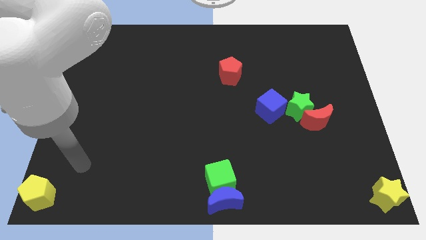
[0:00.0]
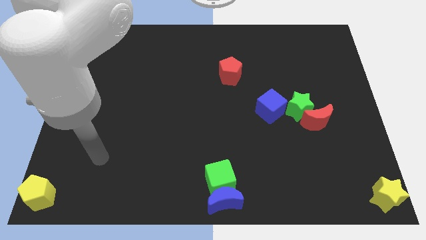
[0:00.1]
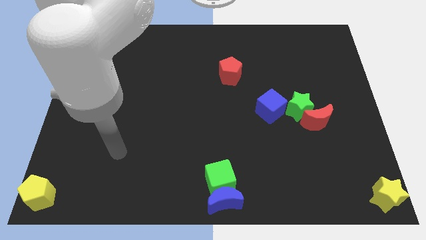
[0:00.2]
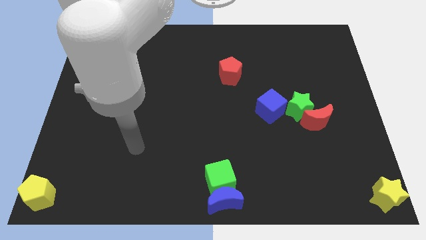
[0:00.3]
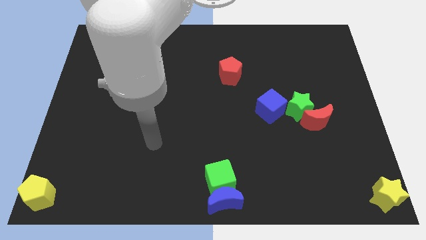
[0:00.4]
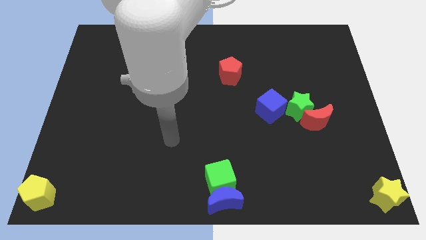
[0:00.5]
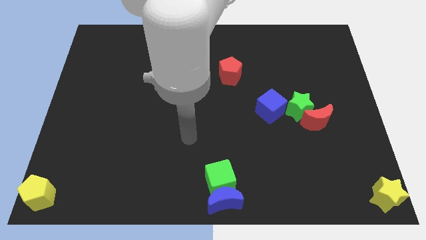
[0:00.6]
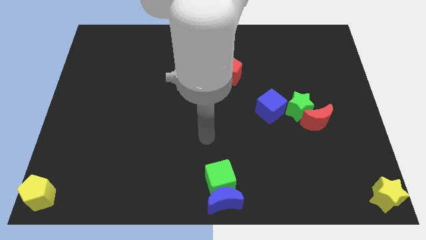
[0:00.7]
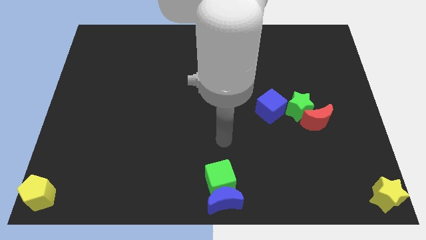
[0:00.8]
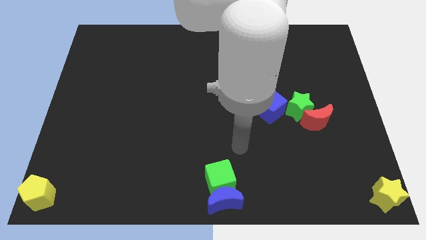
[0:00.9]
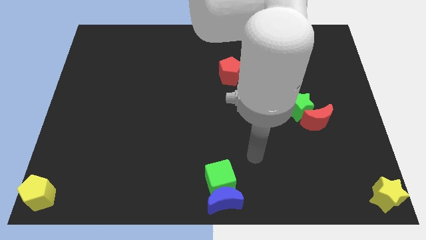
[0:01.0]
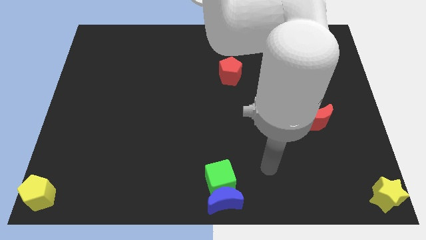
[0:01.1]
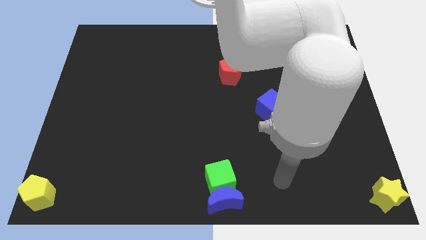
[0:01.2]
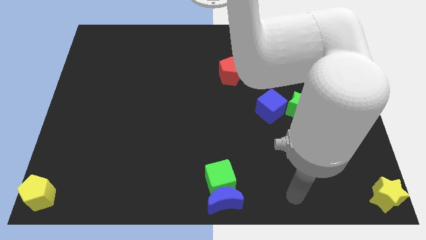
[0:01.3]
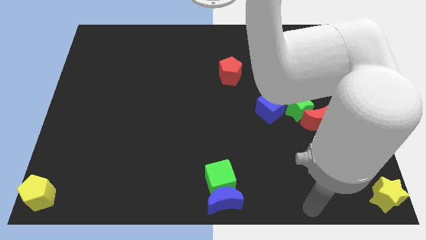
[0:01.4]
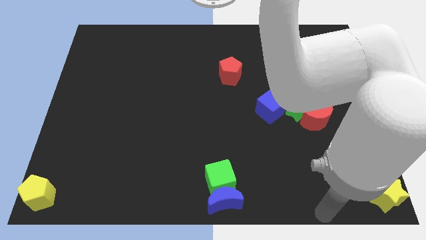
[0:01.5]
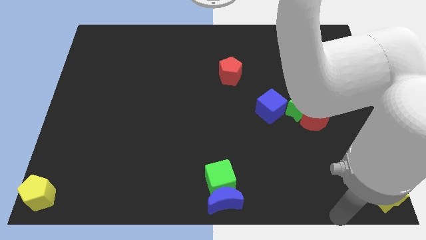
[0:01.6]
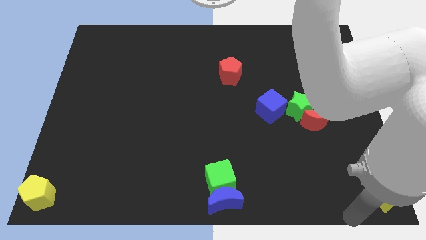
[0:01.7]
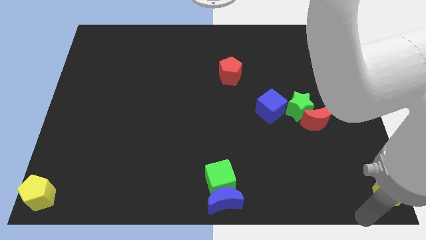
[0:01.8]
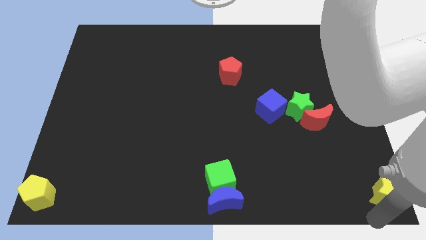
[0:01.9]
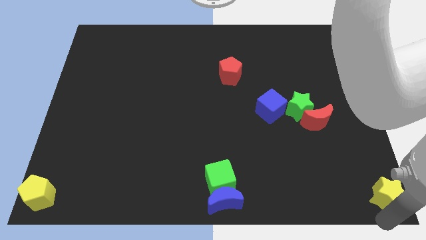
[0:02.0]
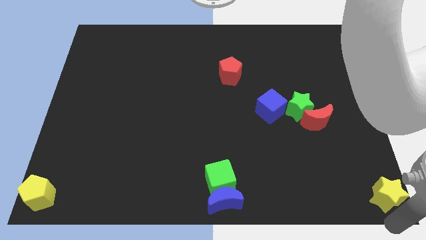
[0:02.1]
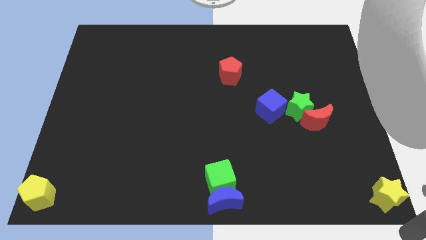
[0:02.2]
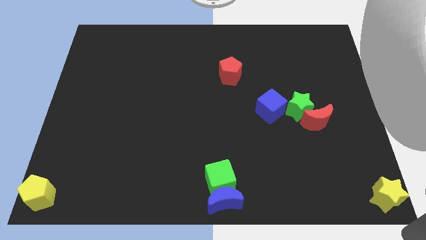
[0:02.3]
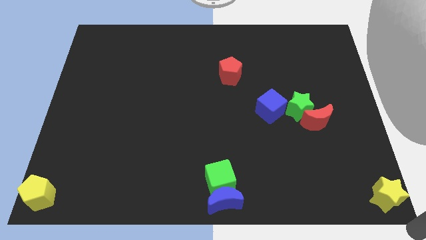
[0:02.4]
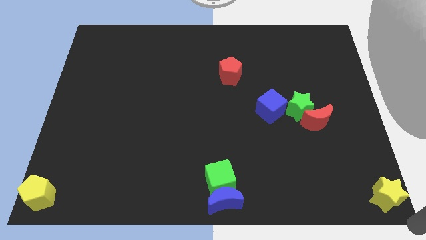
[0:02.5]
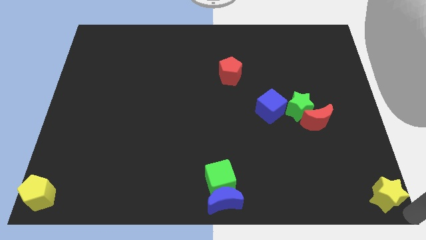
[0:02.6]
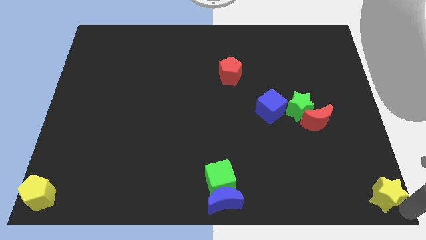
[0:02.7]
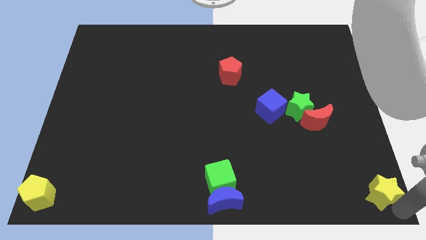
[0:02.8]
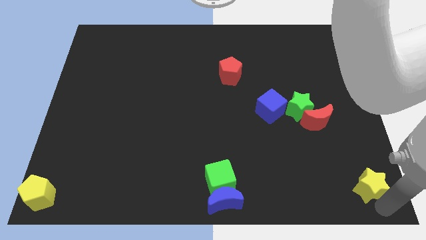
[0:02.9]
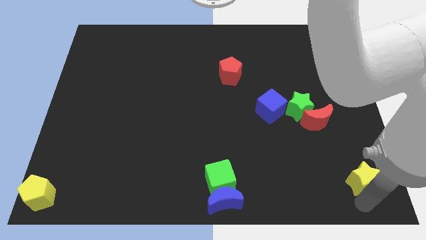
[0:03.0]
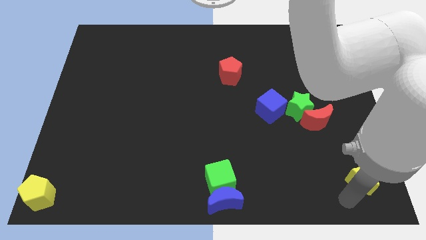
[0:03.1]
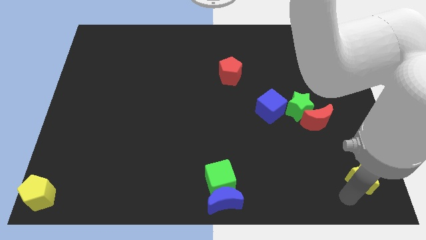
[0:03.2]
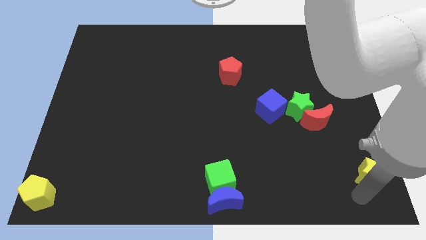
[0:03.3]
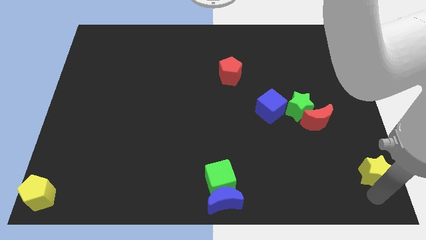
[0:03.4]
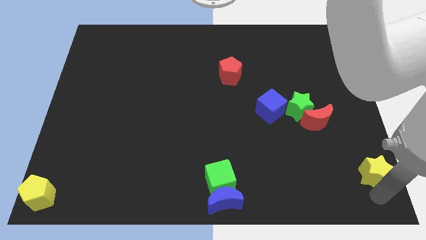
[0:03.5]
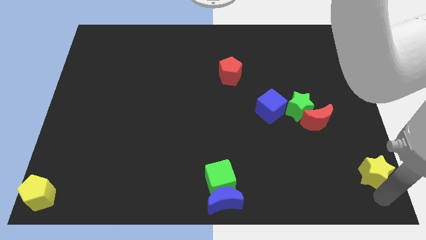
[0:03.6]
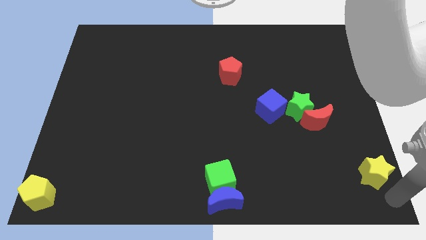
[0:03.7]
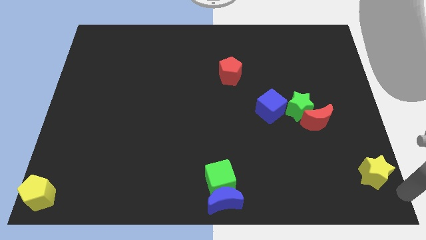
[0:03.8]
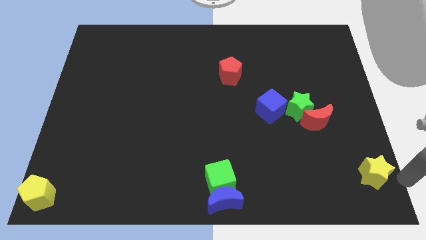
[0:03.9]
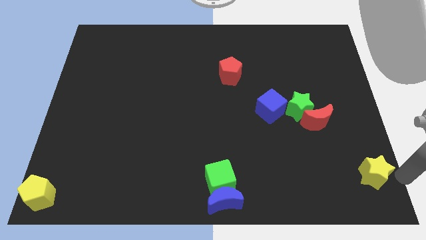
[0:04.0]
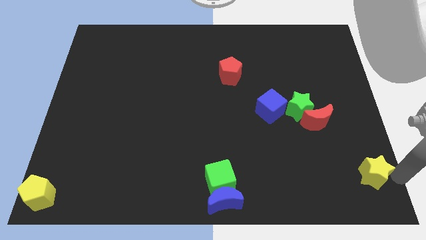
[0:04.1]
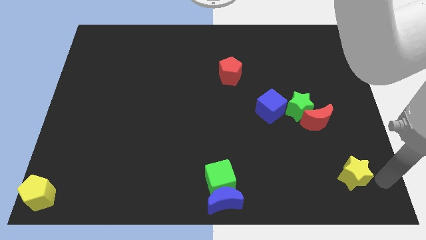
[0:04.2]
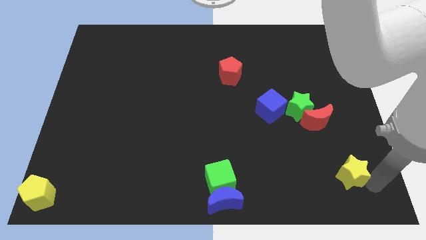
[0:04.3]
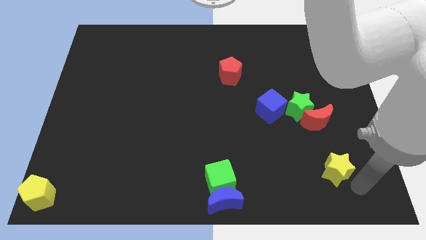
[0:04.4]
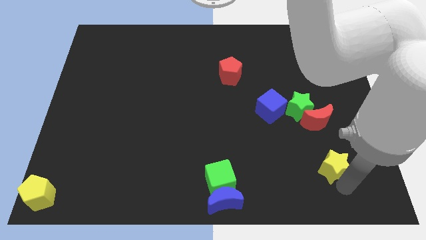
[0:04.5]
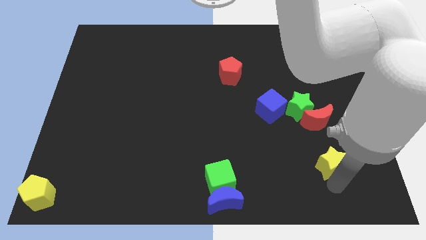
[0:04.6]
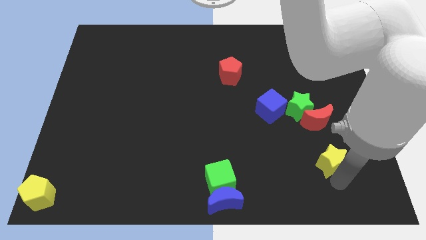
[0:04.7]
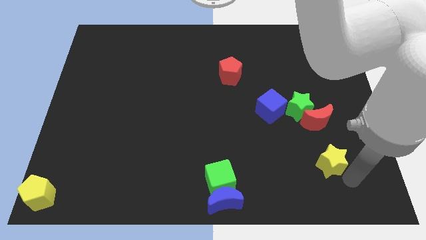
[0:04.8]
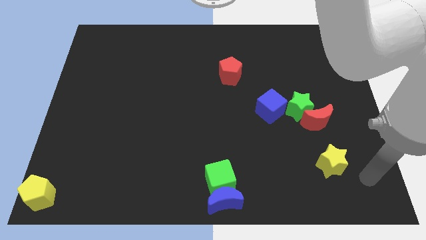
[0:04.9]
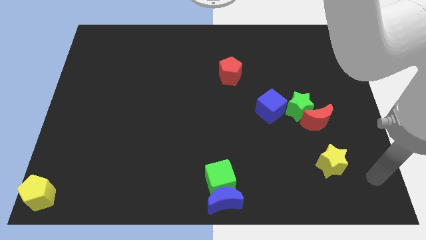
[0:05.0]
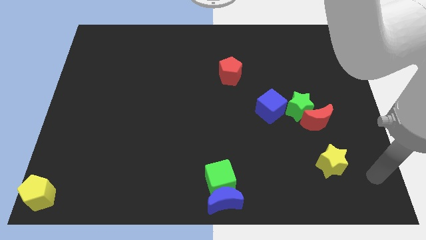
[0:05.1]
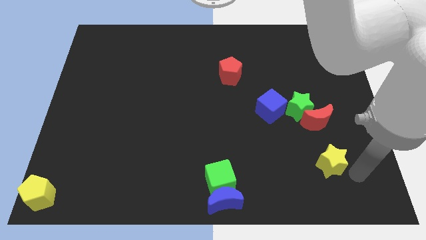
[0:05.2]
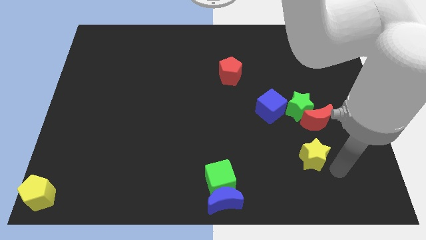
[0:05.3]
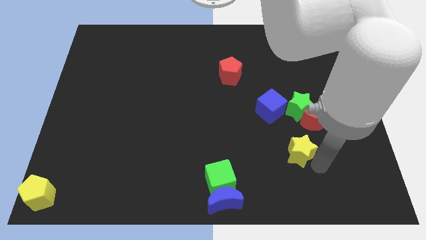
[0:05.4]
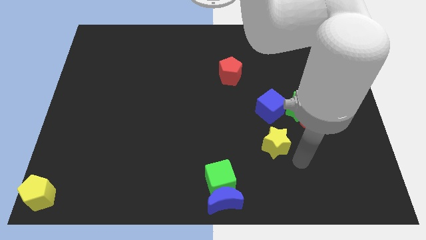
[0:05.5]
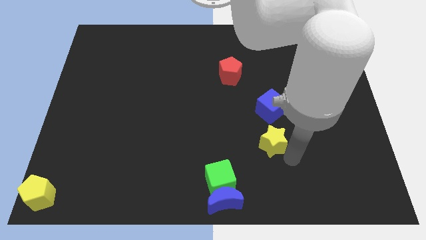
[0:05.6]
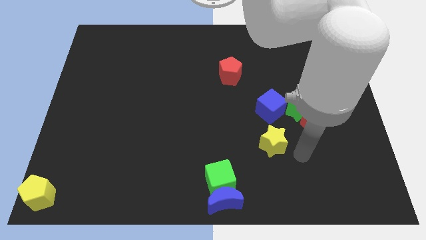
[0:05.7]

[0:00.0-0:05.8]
put the yellow star below blue cube

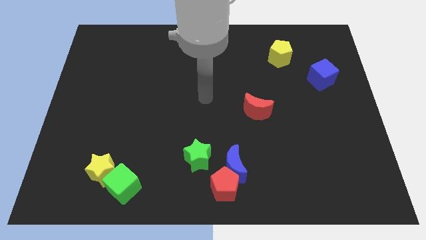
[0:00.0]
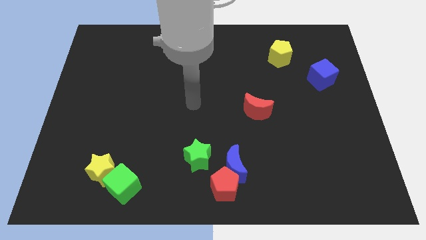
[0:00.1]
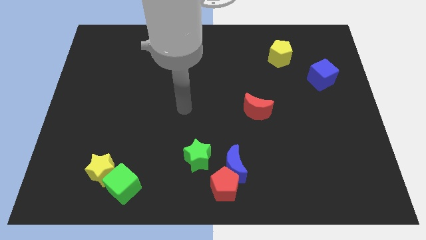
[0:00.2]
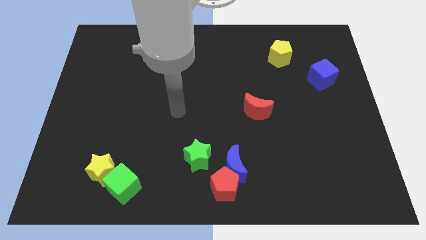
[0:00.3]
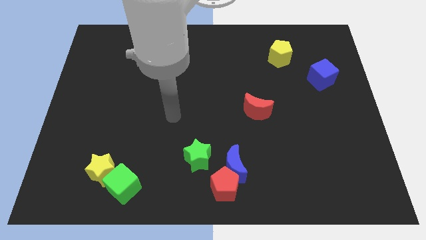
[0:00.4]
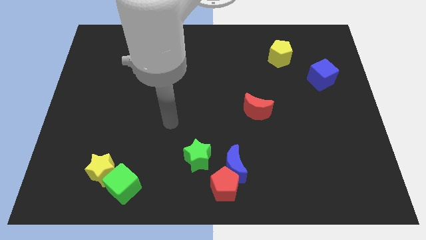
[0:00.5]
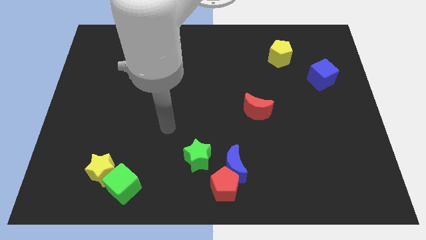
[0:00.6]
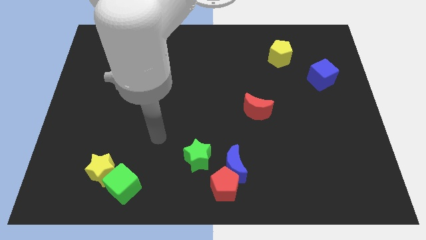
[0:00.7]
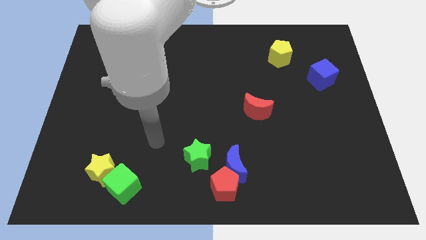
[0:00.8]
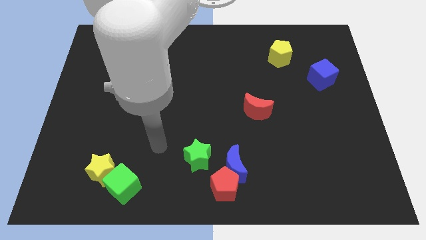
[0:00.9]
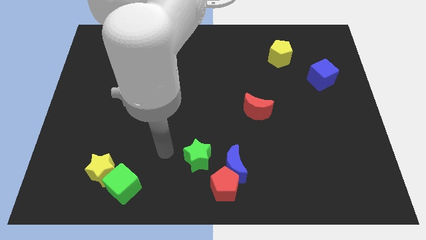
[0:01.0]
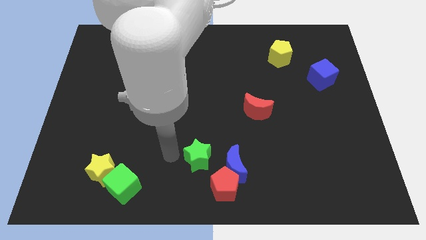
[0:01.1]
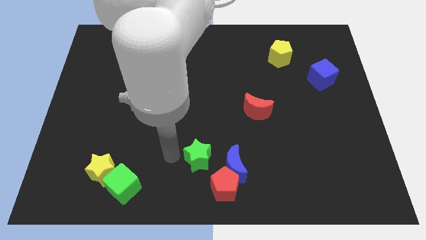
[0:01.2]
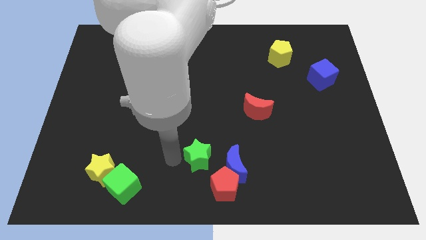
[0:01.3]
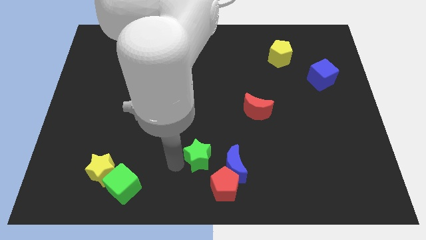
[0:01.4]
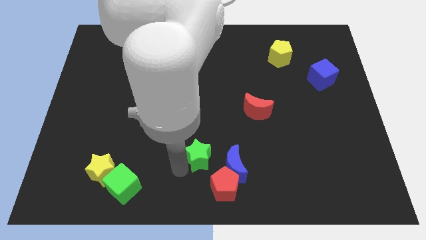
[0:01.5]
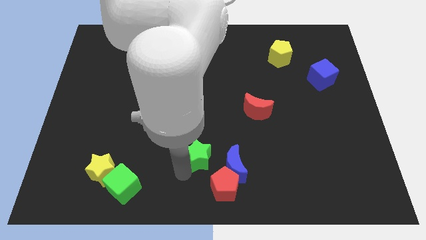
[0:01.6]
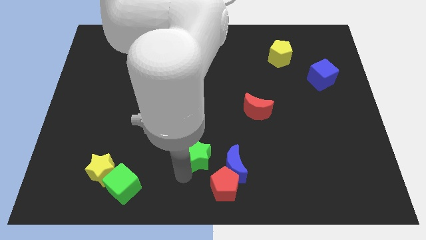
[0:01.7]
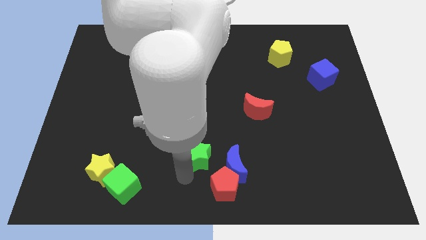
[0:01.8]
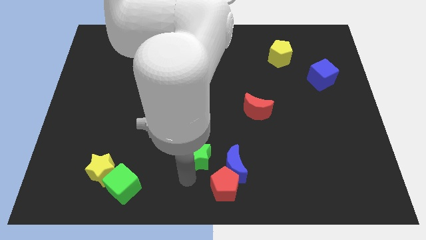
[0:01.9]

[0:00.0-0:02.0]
move the arm towards the red pentagon

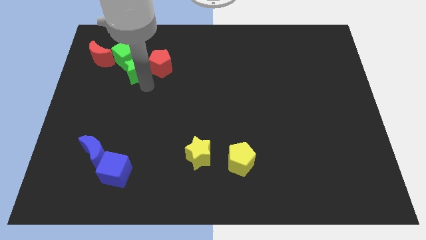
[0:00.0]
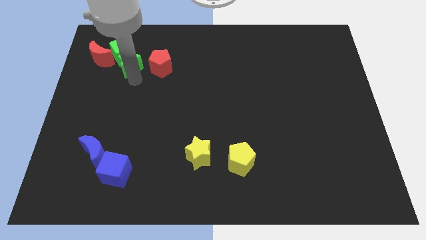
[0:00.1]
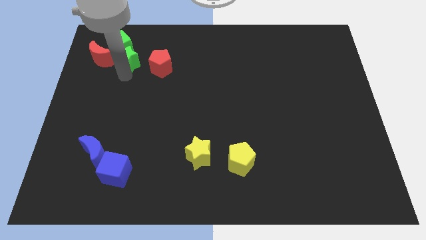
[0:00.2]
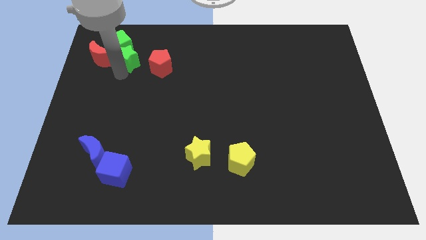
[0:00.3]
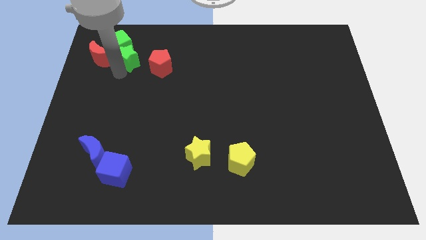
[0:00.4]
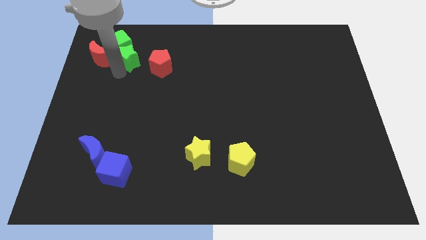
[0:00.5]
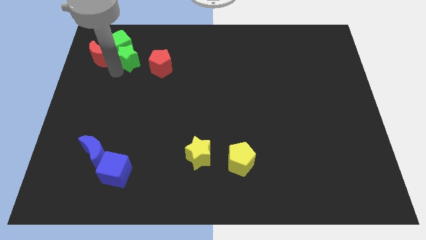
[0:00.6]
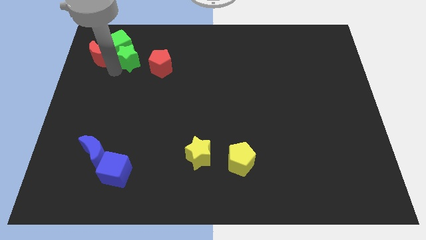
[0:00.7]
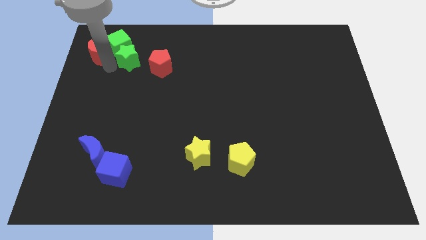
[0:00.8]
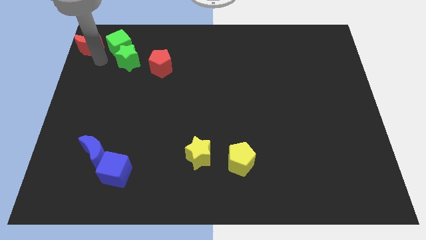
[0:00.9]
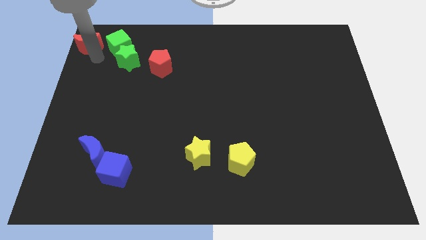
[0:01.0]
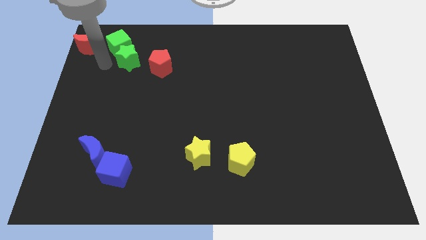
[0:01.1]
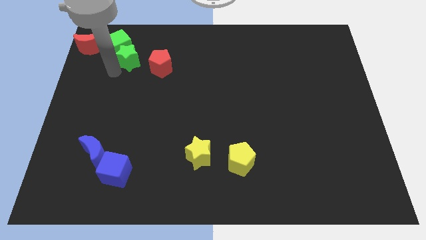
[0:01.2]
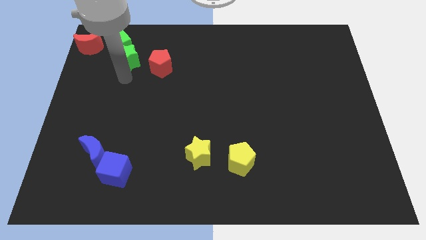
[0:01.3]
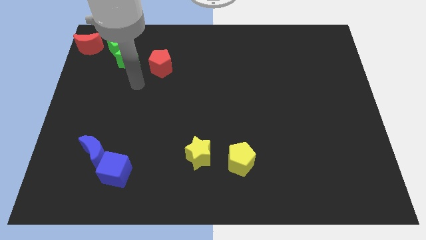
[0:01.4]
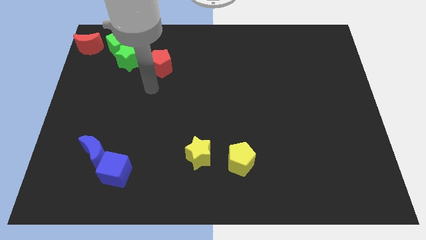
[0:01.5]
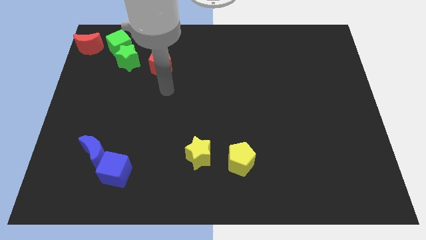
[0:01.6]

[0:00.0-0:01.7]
place the green blocks in between the red blocks
